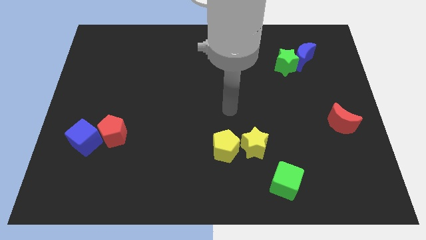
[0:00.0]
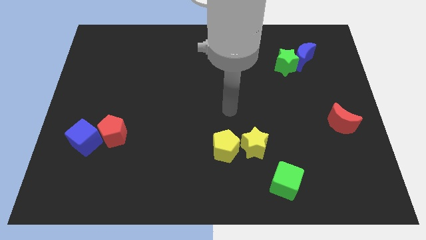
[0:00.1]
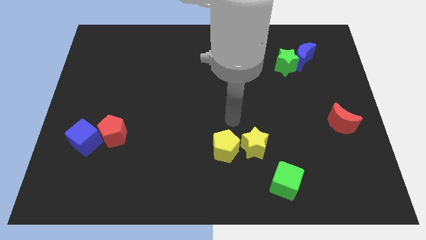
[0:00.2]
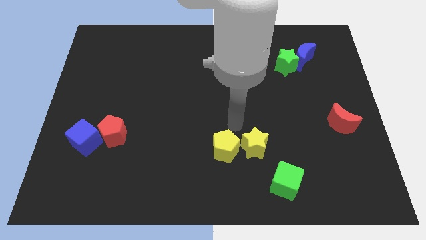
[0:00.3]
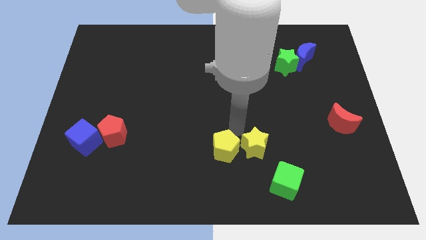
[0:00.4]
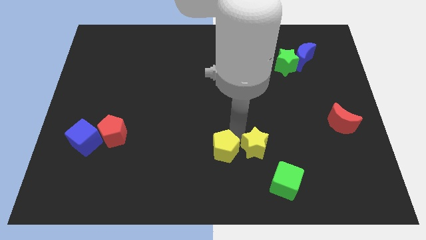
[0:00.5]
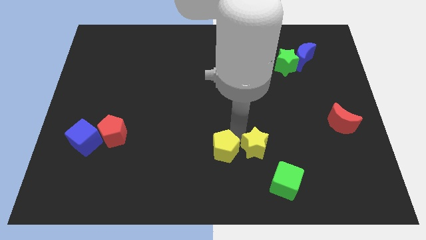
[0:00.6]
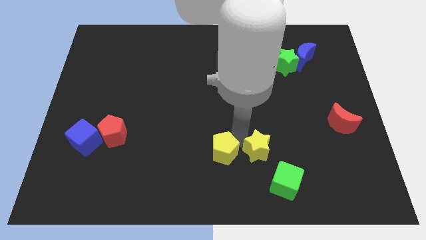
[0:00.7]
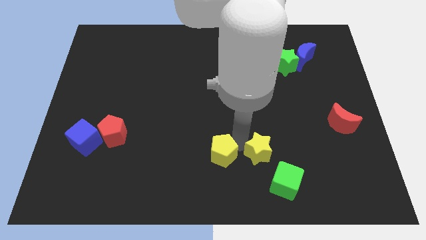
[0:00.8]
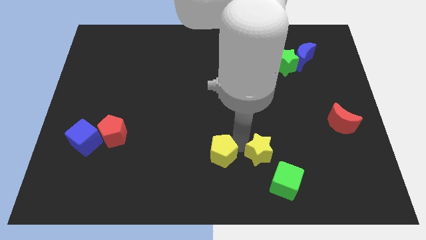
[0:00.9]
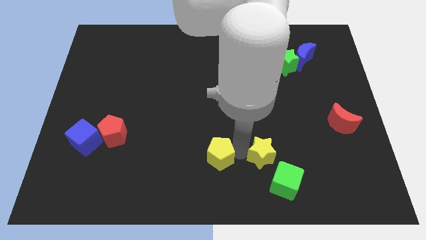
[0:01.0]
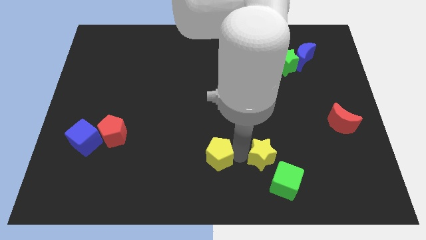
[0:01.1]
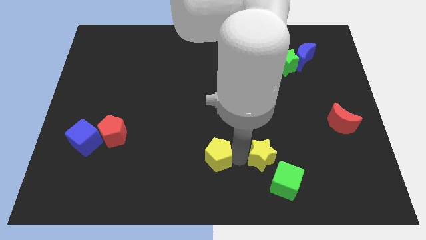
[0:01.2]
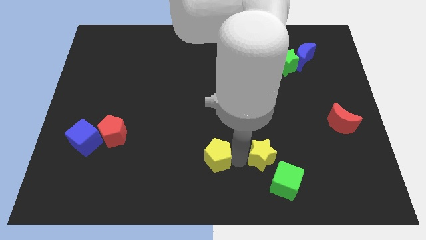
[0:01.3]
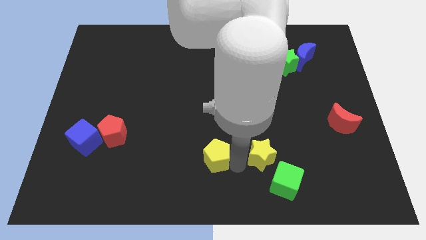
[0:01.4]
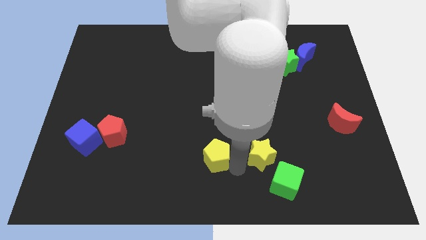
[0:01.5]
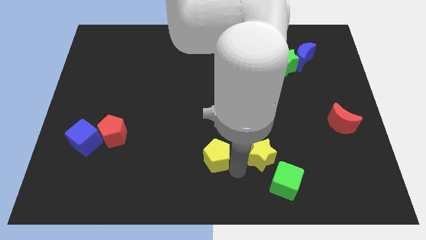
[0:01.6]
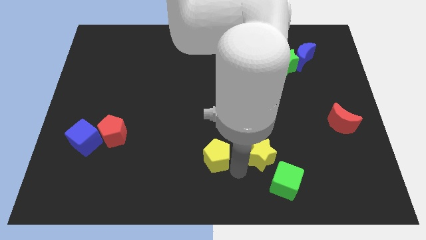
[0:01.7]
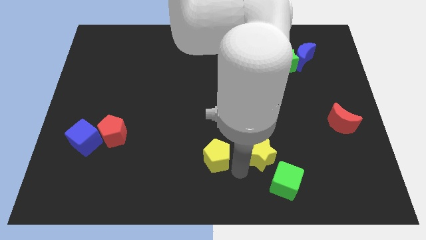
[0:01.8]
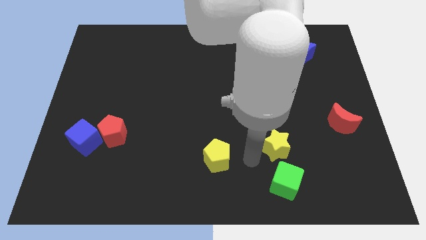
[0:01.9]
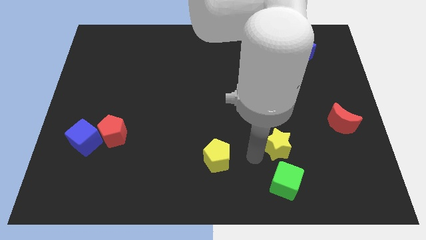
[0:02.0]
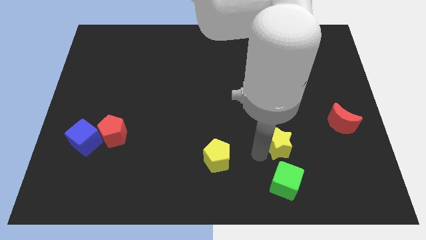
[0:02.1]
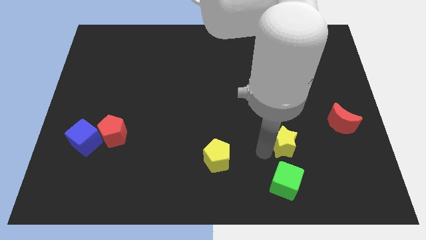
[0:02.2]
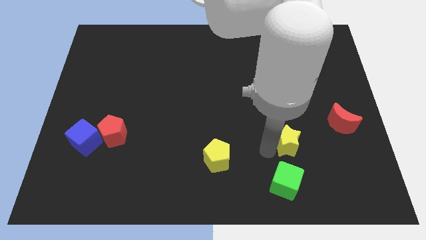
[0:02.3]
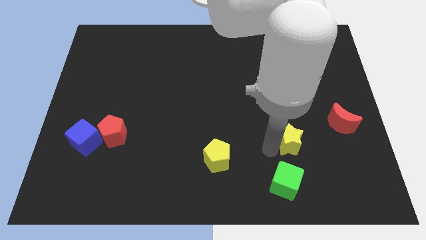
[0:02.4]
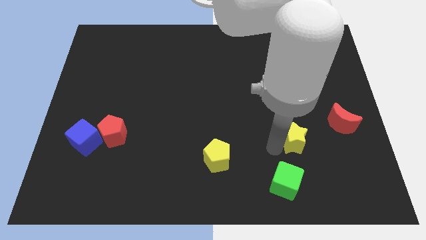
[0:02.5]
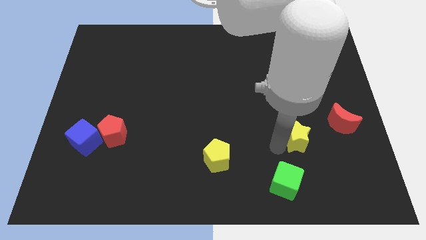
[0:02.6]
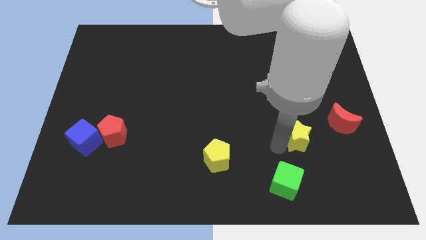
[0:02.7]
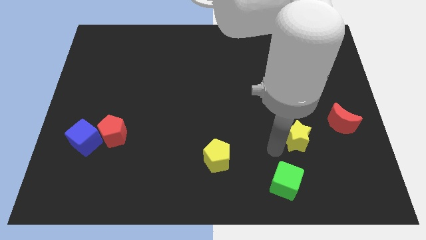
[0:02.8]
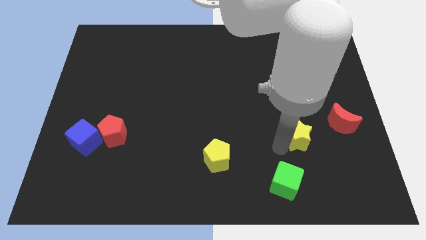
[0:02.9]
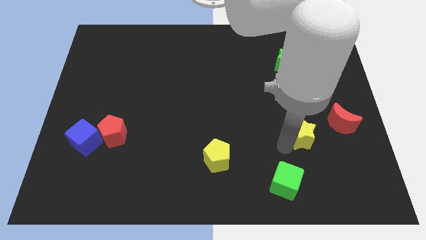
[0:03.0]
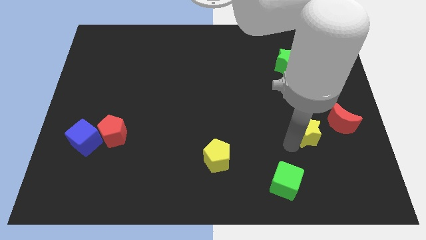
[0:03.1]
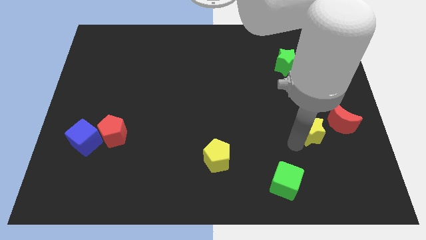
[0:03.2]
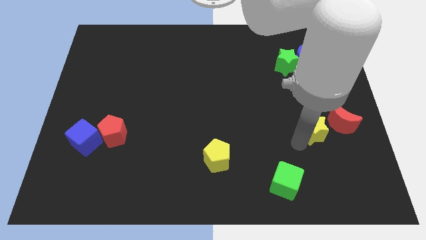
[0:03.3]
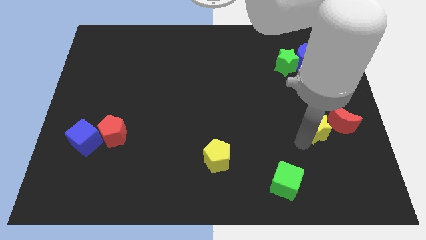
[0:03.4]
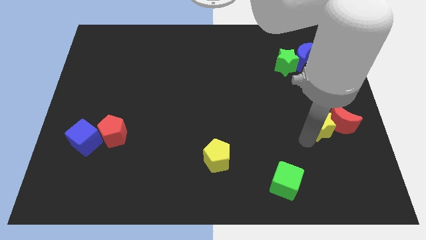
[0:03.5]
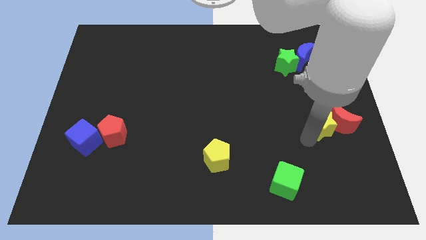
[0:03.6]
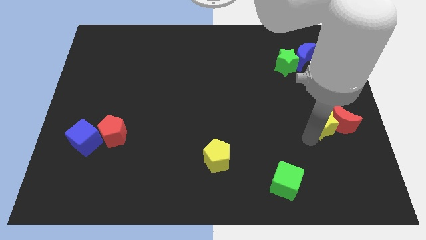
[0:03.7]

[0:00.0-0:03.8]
push the yellow star next to the red moon

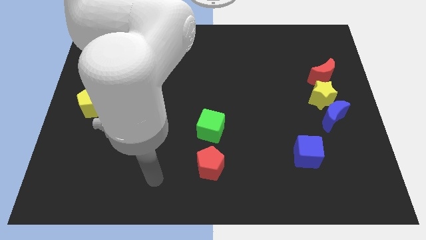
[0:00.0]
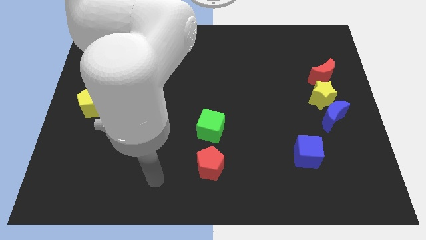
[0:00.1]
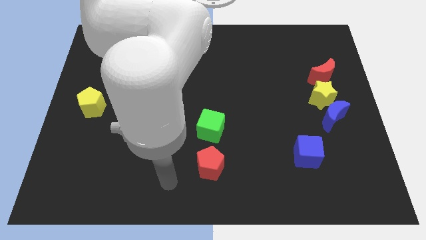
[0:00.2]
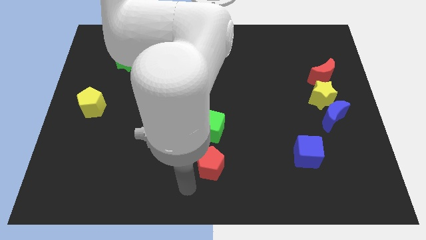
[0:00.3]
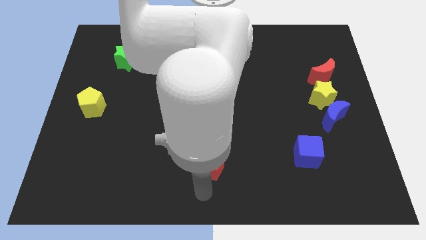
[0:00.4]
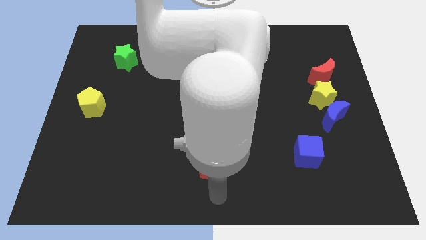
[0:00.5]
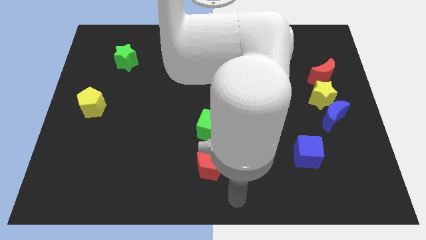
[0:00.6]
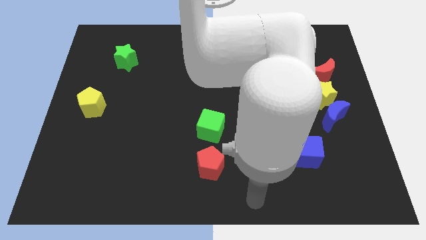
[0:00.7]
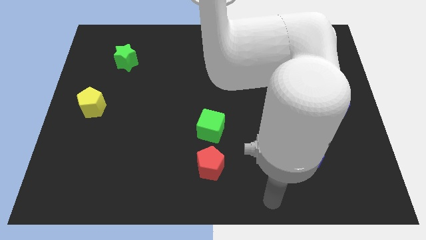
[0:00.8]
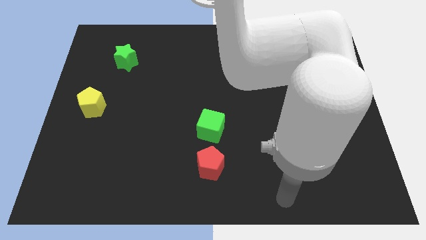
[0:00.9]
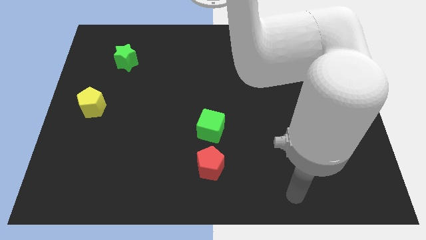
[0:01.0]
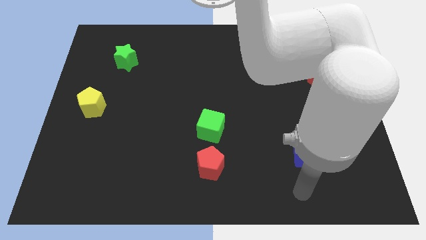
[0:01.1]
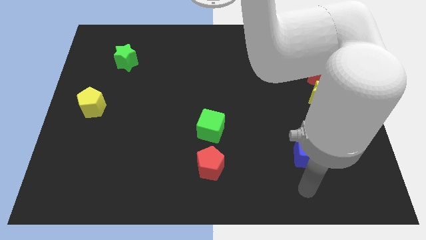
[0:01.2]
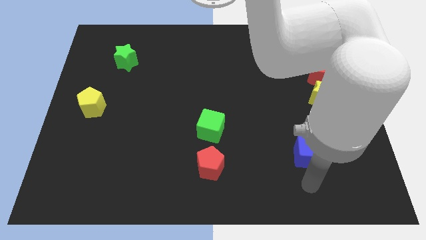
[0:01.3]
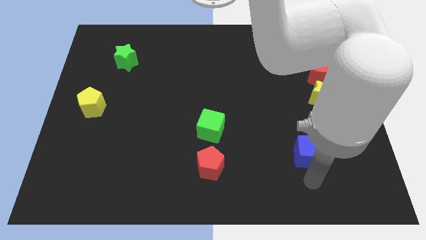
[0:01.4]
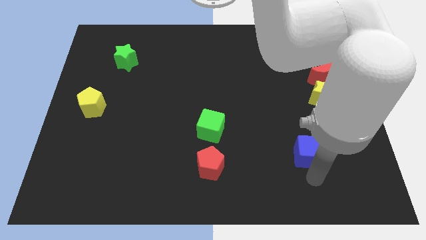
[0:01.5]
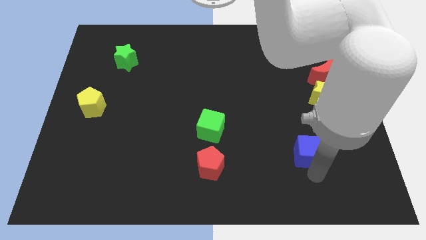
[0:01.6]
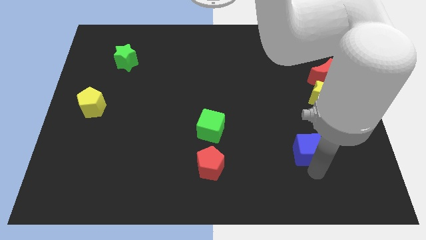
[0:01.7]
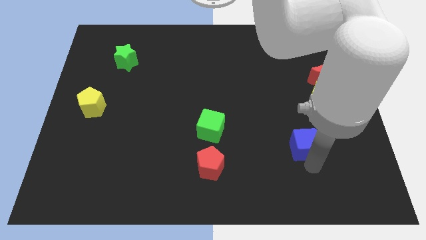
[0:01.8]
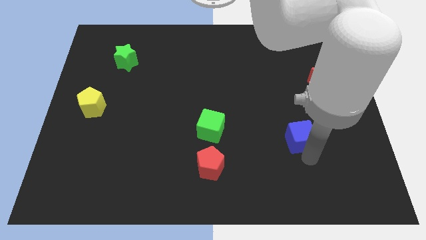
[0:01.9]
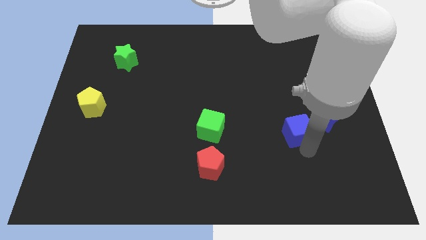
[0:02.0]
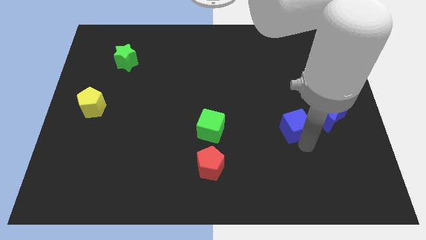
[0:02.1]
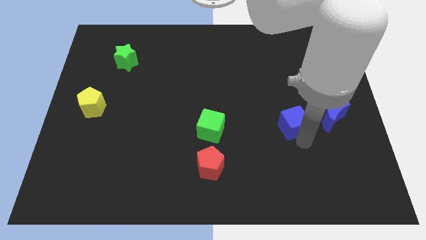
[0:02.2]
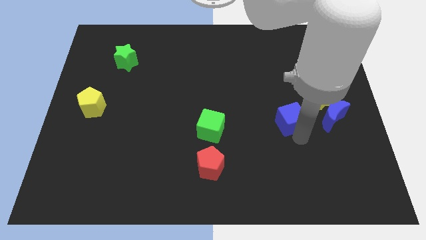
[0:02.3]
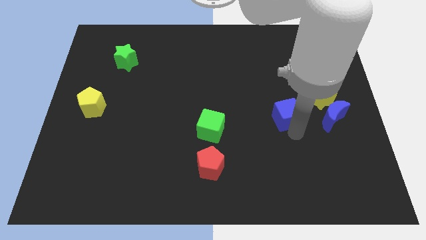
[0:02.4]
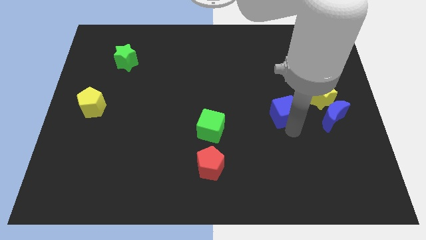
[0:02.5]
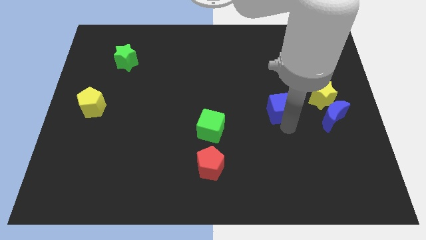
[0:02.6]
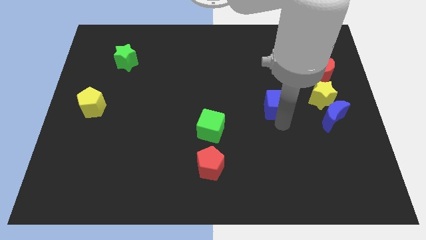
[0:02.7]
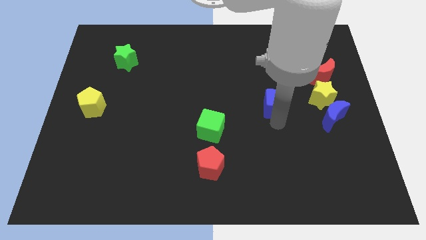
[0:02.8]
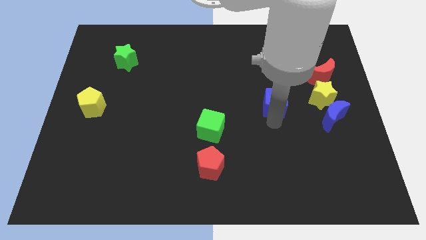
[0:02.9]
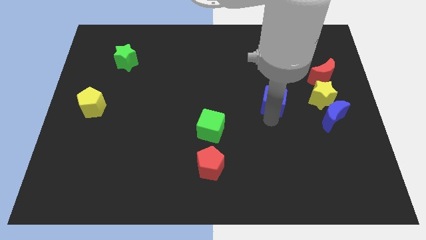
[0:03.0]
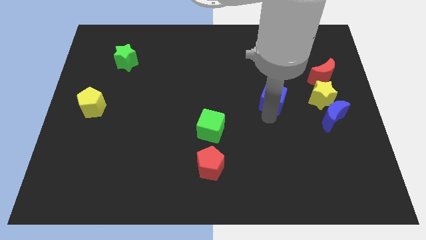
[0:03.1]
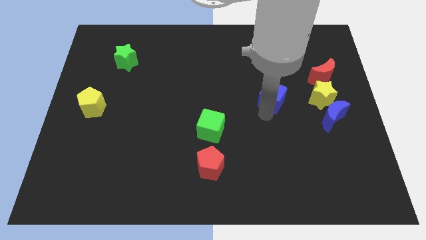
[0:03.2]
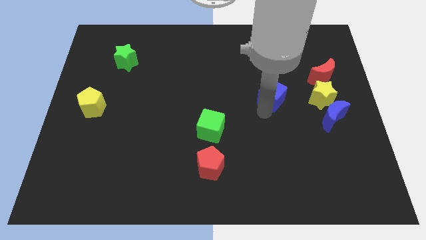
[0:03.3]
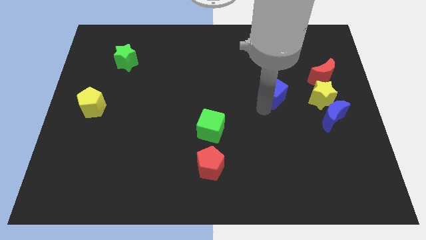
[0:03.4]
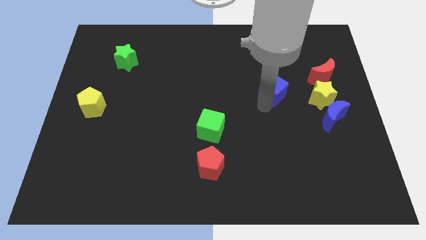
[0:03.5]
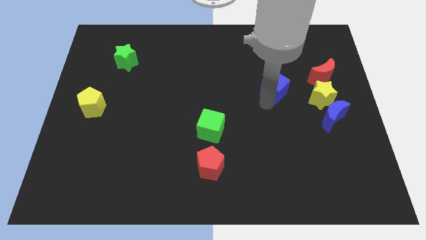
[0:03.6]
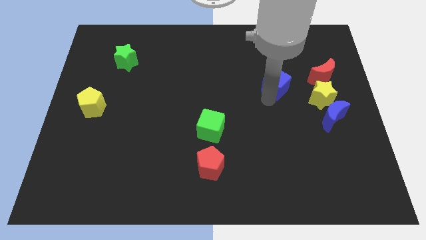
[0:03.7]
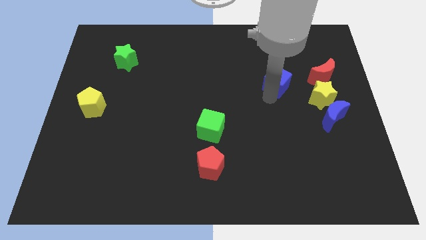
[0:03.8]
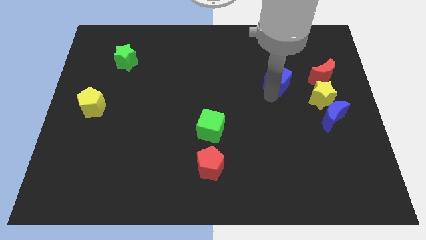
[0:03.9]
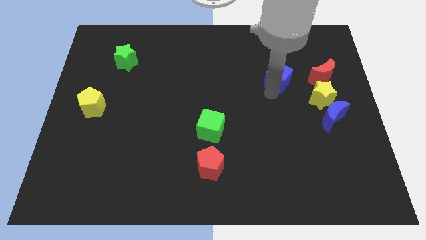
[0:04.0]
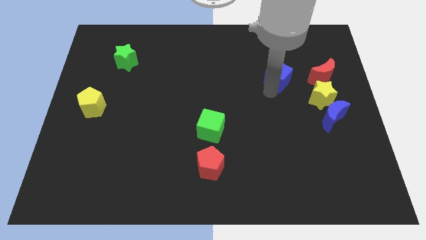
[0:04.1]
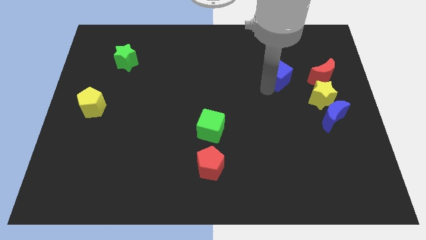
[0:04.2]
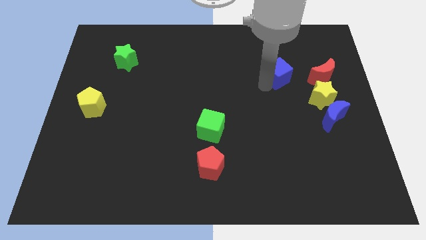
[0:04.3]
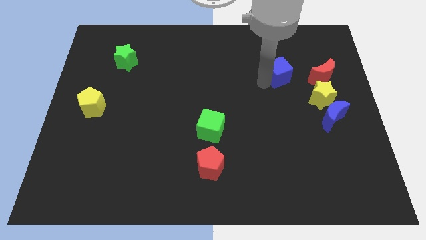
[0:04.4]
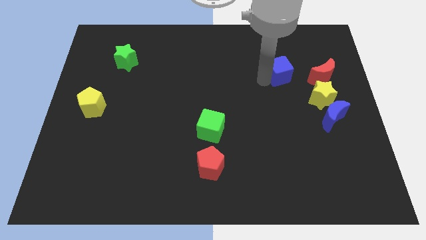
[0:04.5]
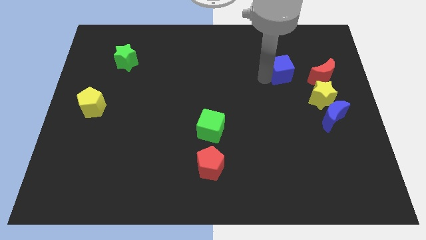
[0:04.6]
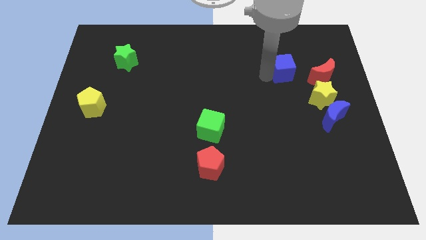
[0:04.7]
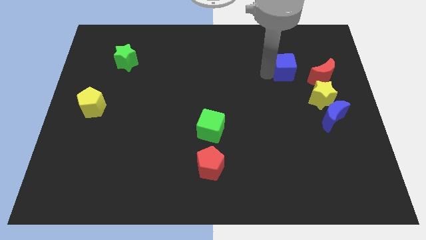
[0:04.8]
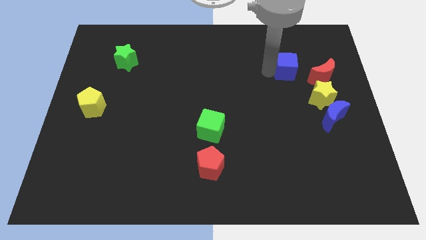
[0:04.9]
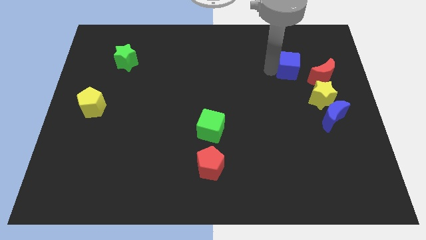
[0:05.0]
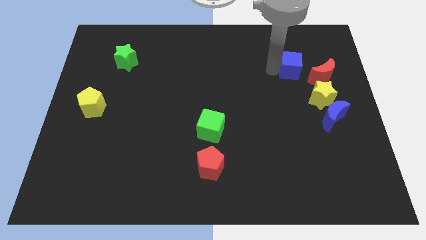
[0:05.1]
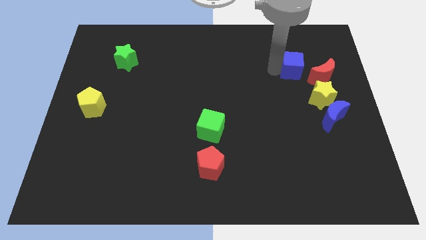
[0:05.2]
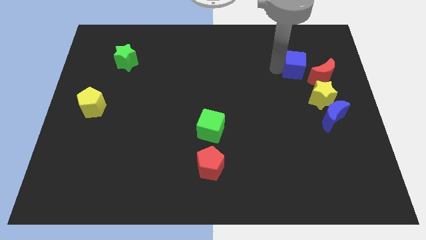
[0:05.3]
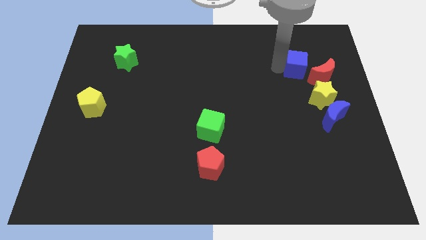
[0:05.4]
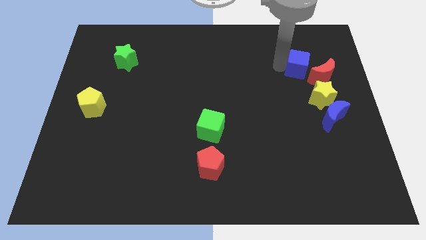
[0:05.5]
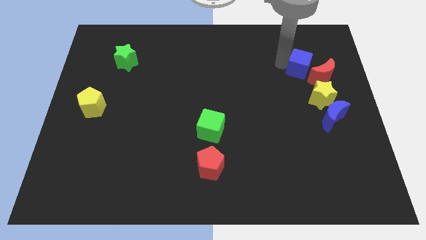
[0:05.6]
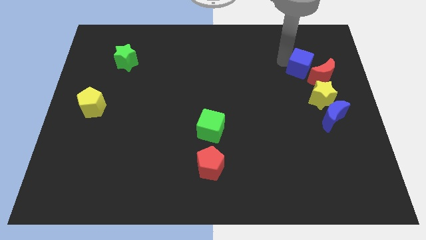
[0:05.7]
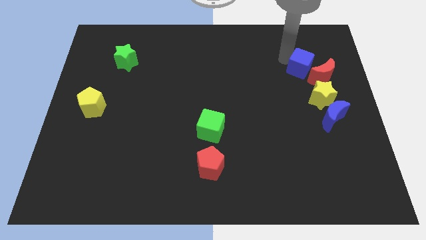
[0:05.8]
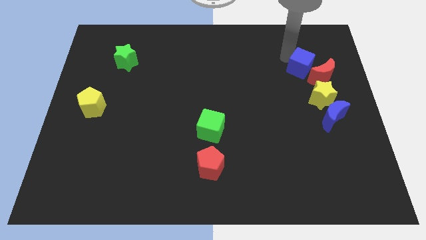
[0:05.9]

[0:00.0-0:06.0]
move the blue cube towards the red moon
